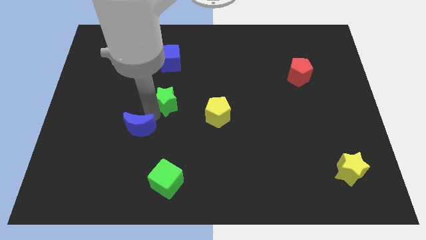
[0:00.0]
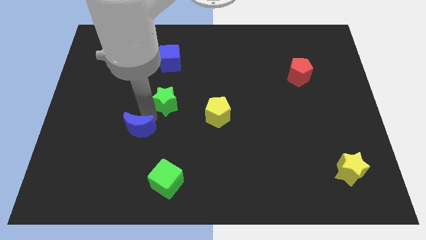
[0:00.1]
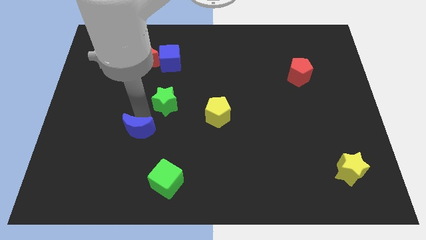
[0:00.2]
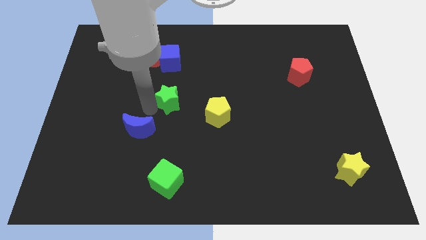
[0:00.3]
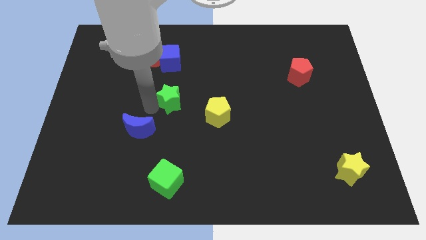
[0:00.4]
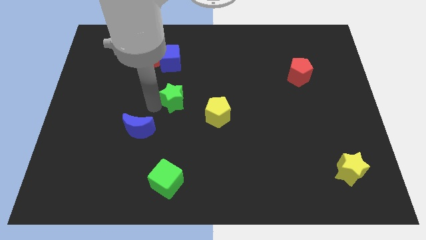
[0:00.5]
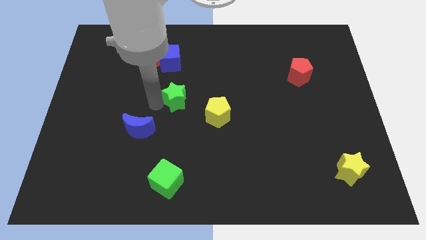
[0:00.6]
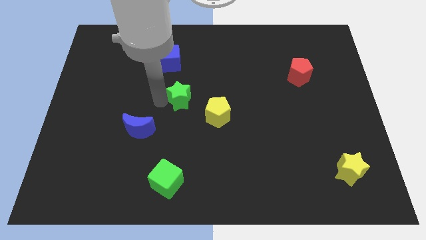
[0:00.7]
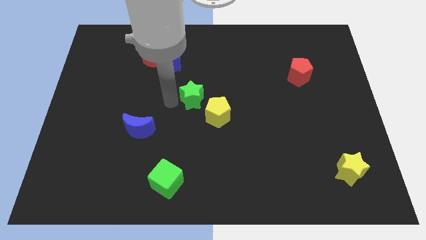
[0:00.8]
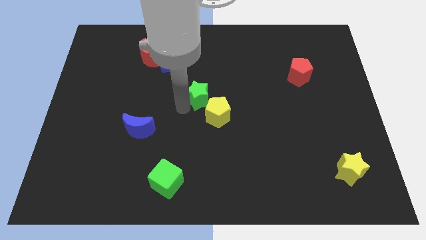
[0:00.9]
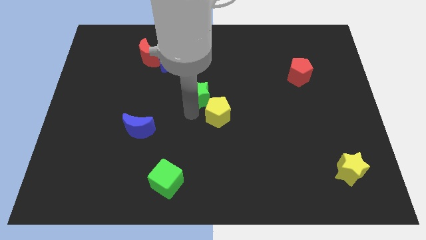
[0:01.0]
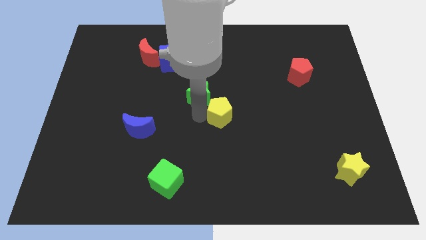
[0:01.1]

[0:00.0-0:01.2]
place the green star diagonally to the yellow pentagon

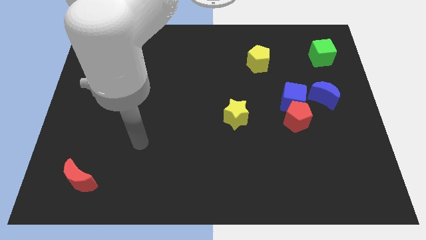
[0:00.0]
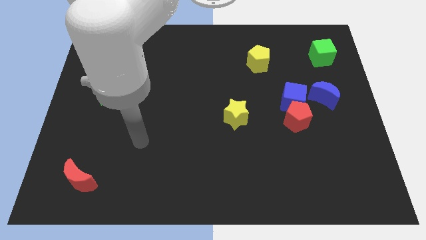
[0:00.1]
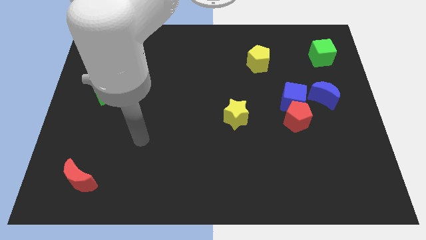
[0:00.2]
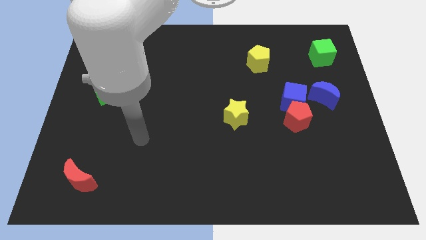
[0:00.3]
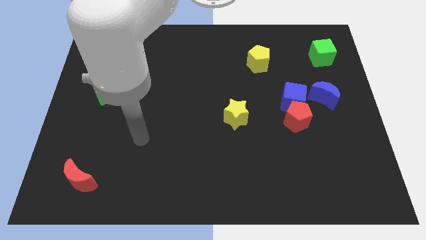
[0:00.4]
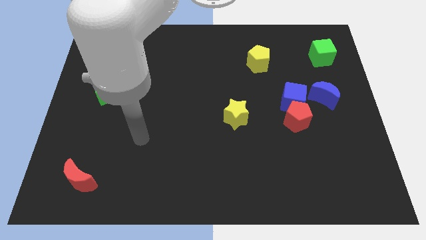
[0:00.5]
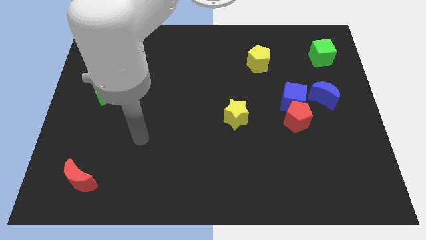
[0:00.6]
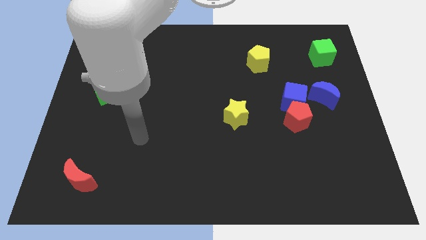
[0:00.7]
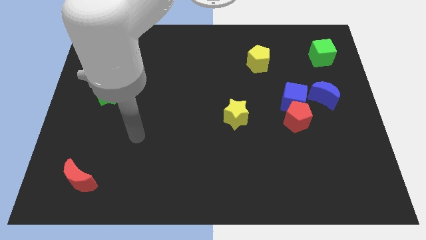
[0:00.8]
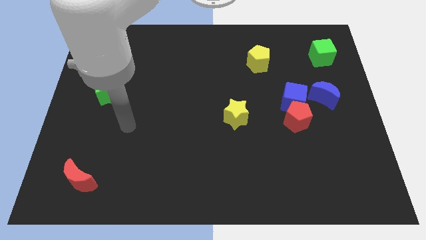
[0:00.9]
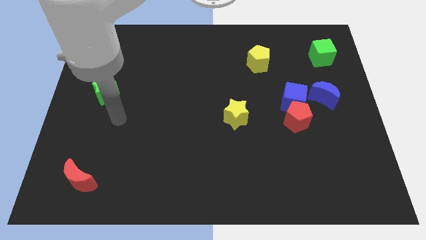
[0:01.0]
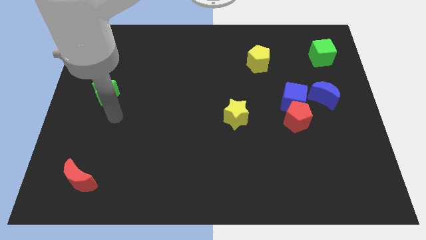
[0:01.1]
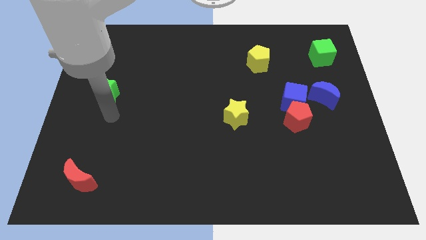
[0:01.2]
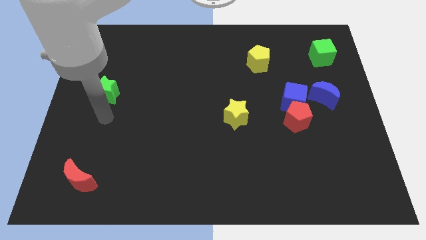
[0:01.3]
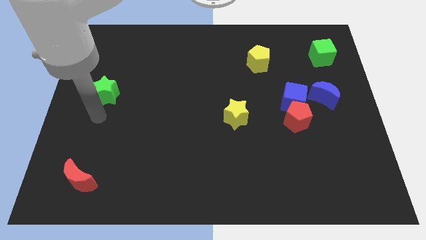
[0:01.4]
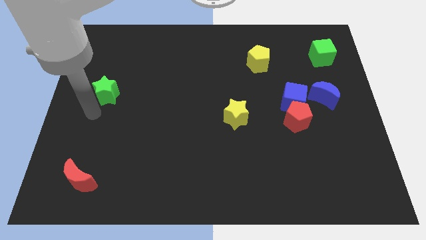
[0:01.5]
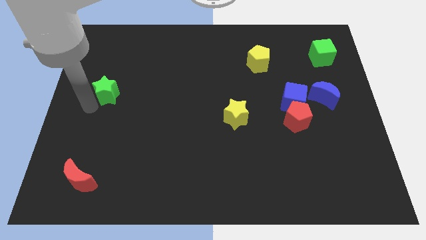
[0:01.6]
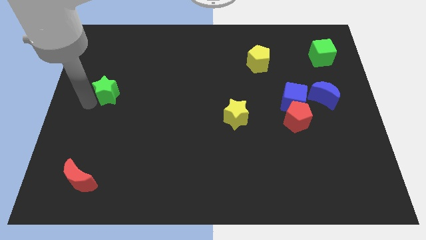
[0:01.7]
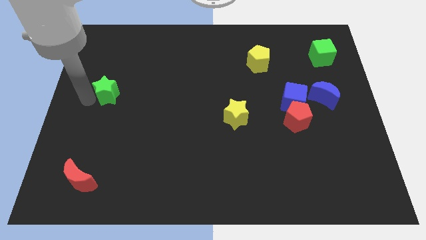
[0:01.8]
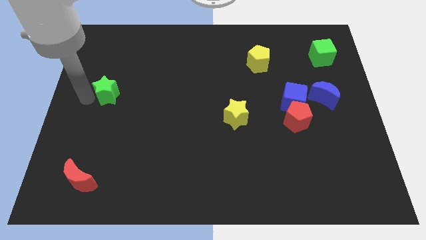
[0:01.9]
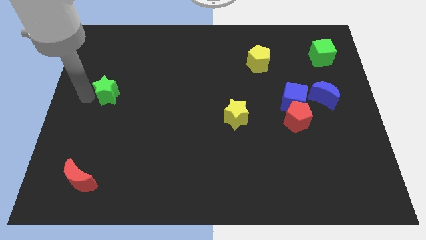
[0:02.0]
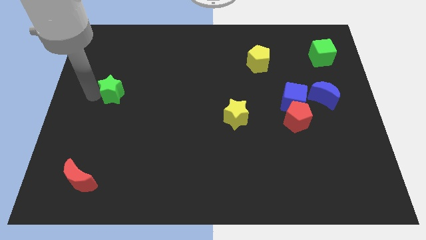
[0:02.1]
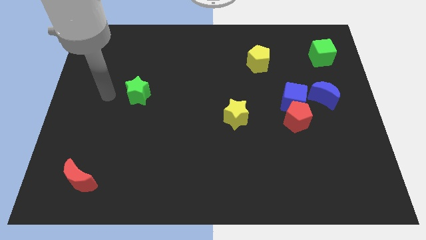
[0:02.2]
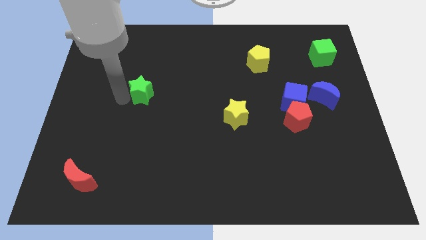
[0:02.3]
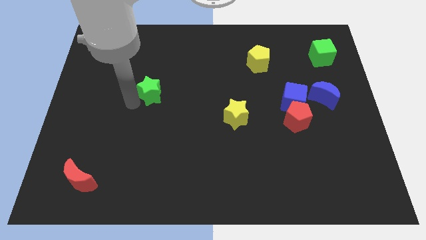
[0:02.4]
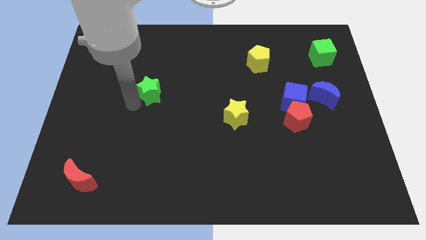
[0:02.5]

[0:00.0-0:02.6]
move the green star towards the center of the board

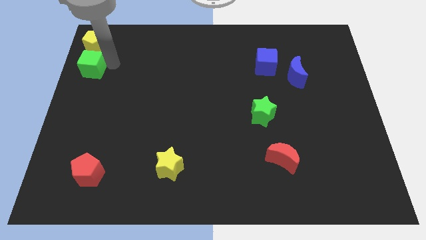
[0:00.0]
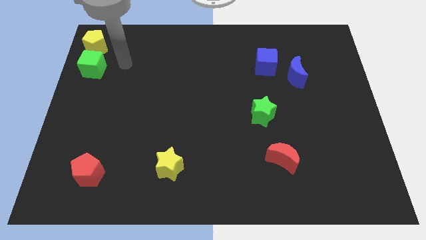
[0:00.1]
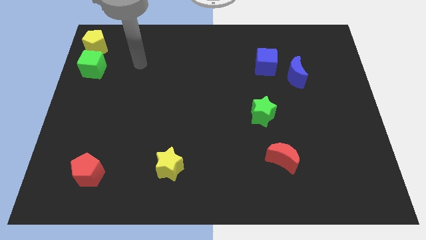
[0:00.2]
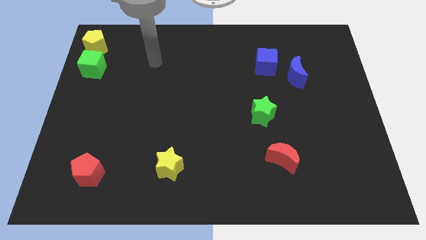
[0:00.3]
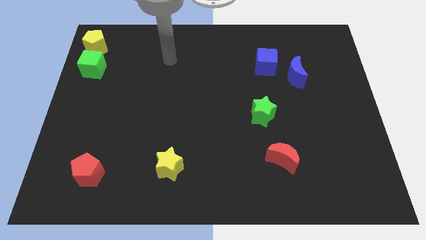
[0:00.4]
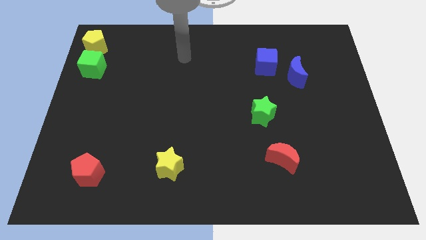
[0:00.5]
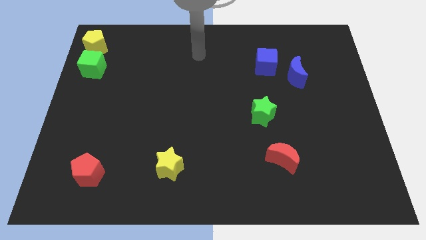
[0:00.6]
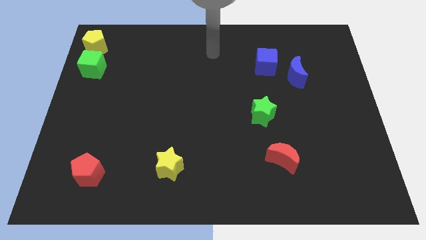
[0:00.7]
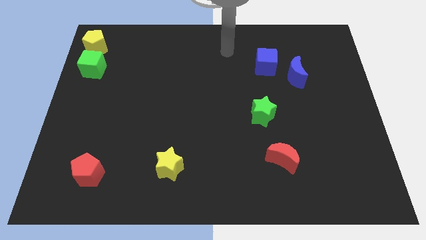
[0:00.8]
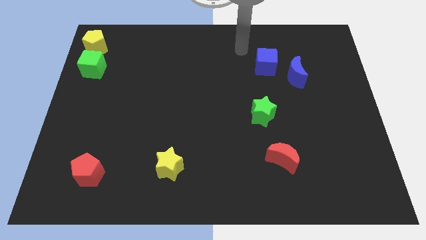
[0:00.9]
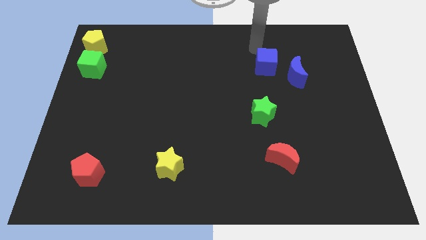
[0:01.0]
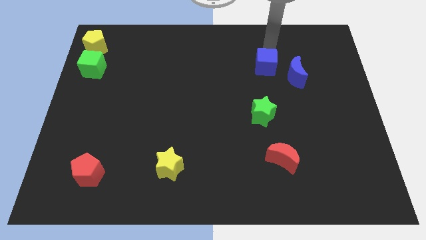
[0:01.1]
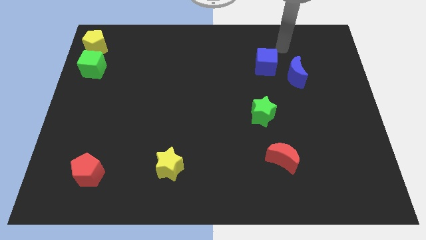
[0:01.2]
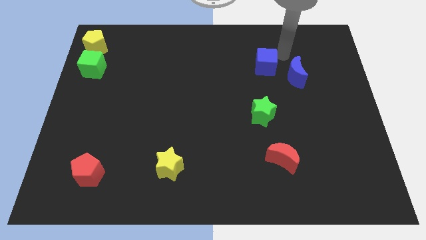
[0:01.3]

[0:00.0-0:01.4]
move your hand away from the green cube

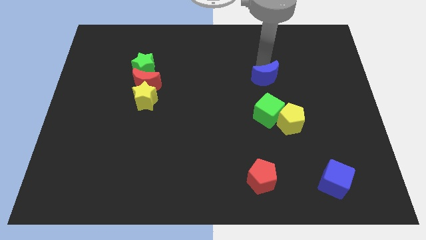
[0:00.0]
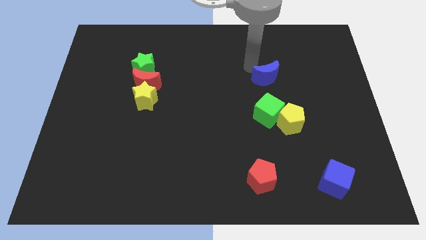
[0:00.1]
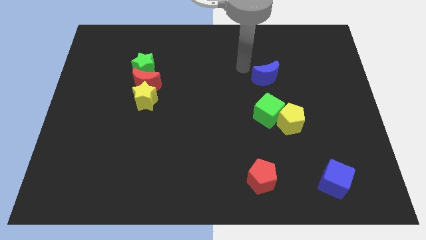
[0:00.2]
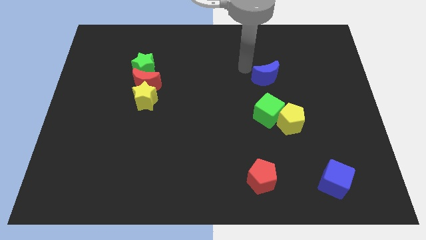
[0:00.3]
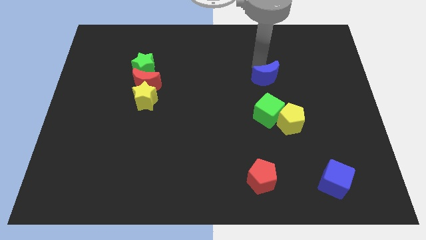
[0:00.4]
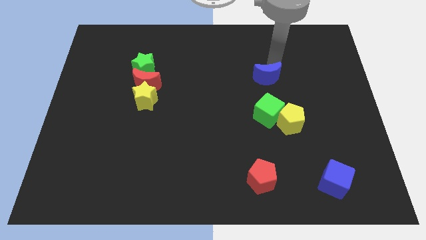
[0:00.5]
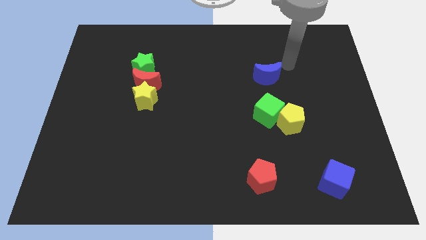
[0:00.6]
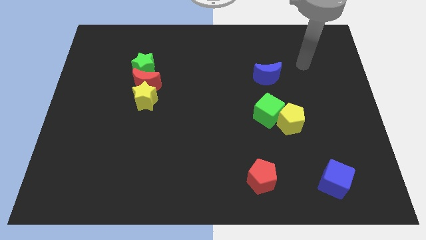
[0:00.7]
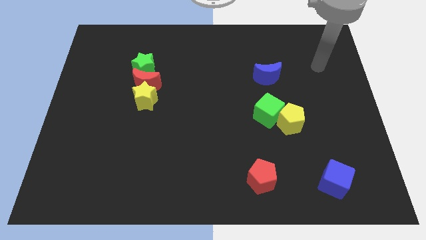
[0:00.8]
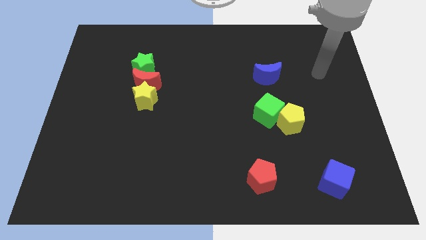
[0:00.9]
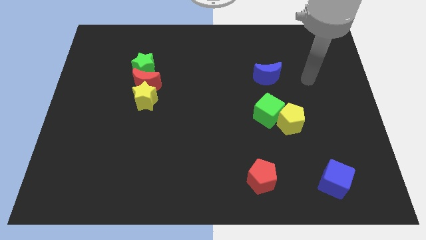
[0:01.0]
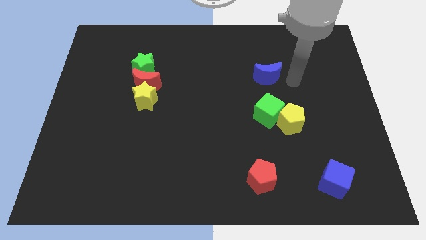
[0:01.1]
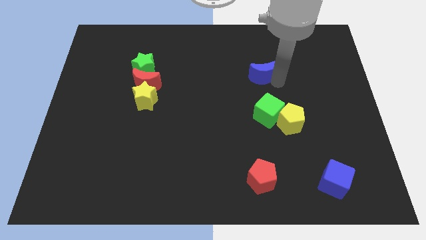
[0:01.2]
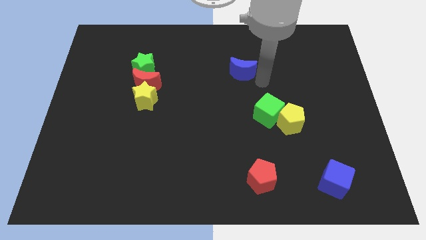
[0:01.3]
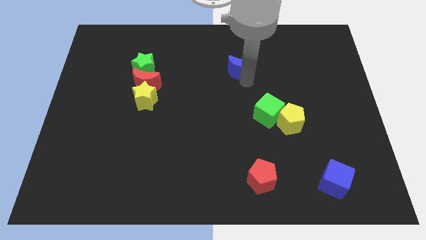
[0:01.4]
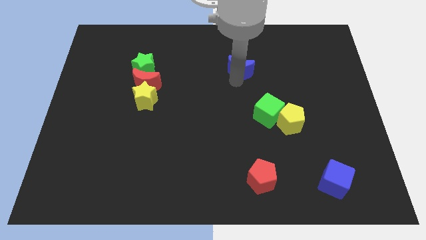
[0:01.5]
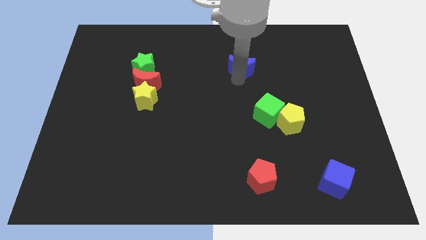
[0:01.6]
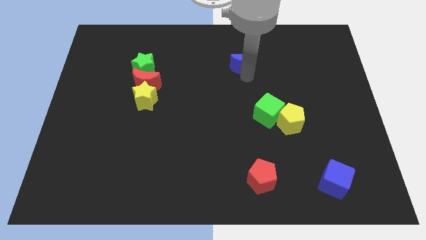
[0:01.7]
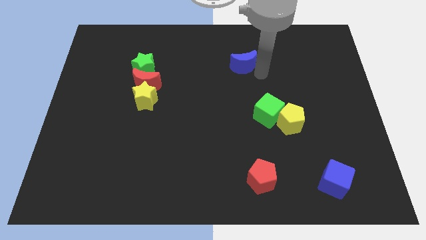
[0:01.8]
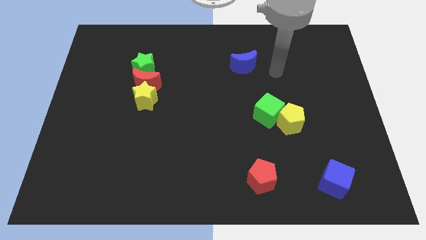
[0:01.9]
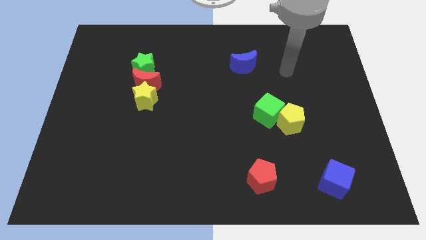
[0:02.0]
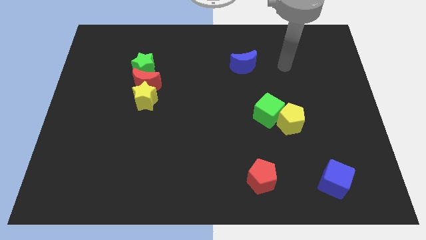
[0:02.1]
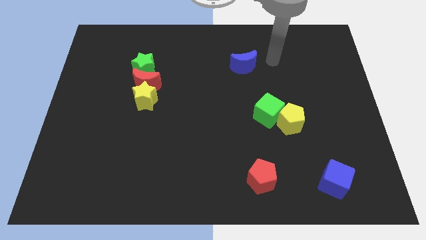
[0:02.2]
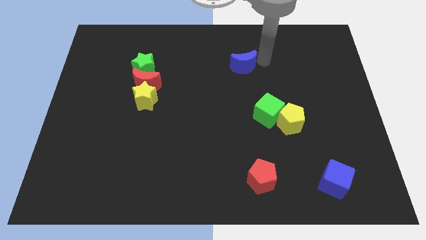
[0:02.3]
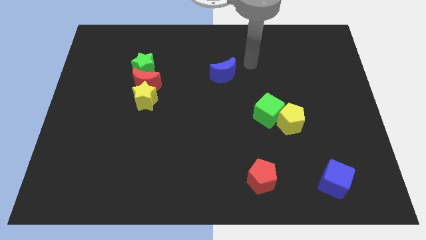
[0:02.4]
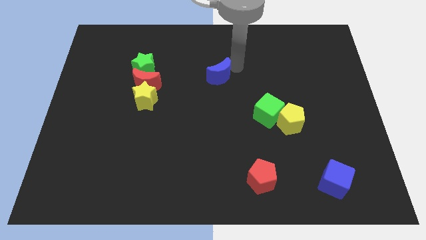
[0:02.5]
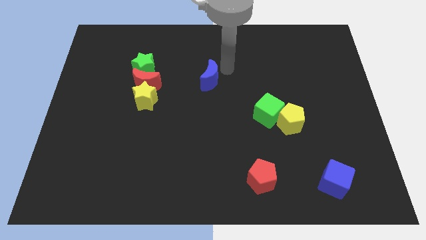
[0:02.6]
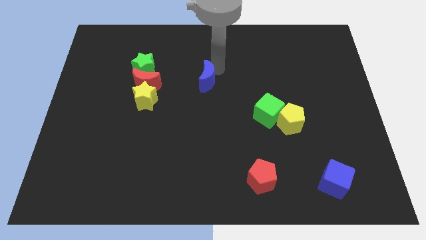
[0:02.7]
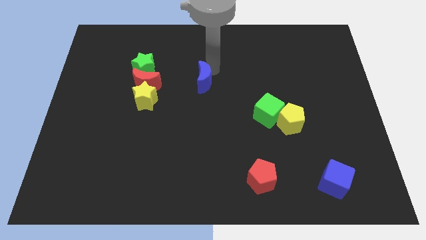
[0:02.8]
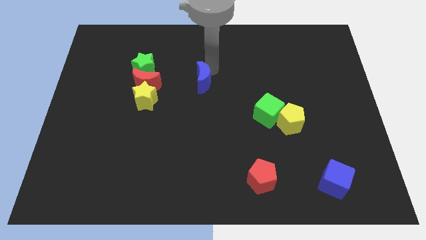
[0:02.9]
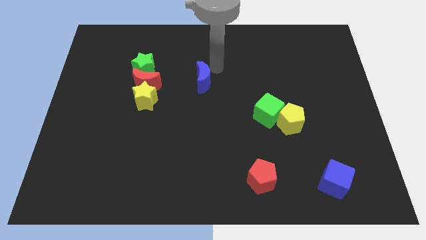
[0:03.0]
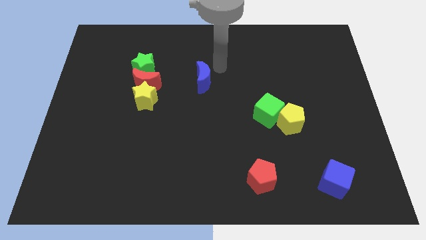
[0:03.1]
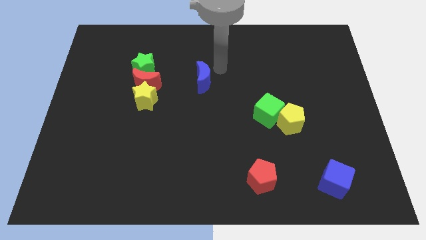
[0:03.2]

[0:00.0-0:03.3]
move blue moon towards red moon

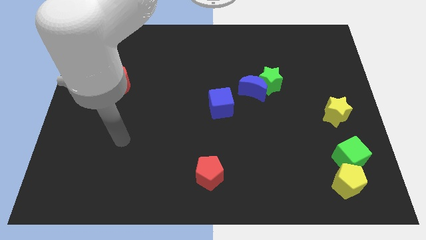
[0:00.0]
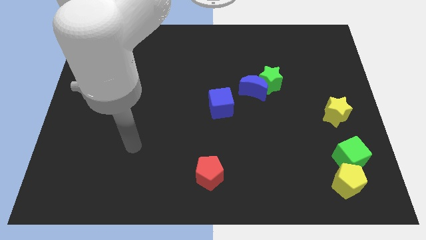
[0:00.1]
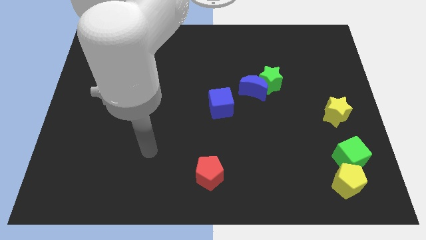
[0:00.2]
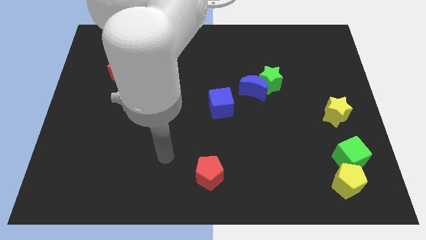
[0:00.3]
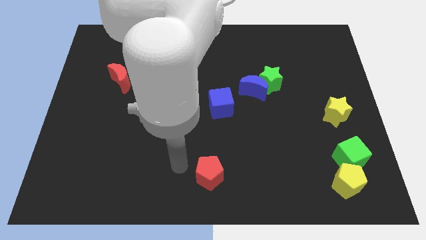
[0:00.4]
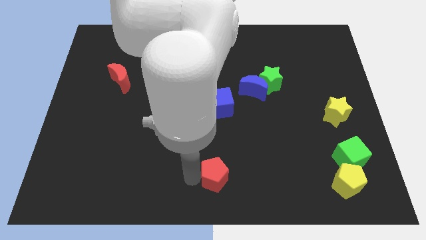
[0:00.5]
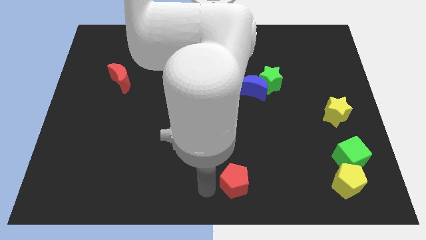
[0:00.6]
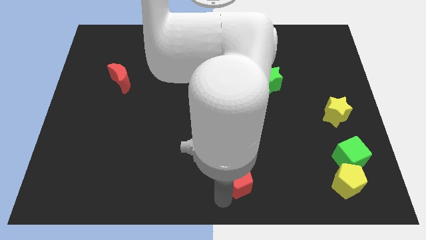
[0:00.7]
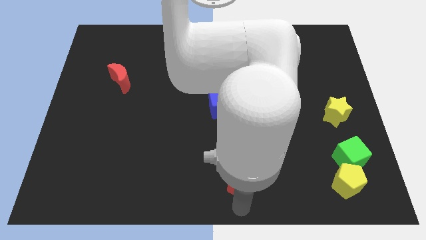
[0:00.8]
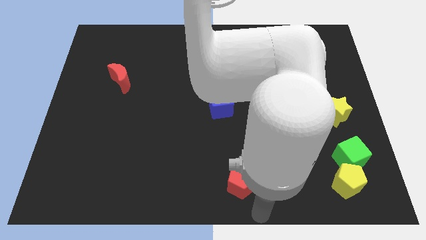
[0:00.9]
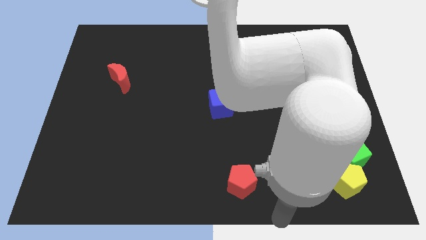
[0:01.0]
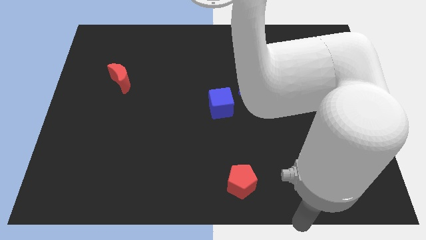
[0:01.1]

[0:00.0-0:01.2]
place red pentagon to the left of yellow pentagon
